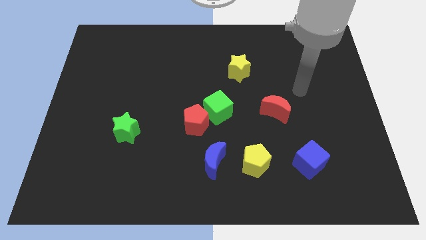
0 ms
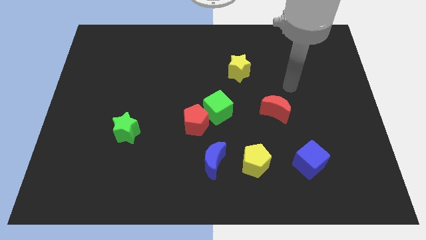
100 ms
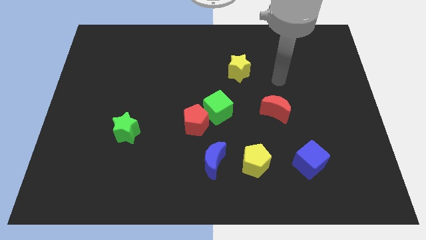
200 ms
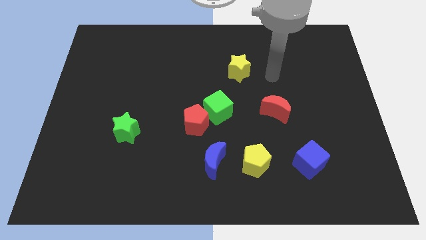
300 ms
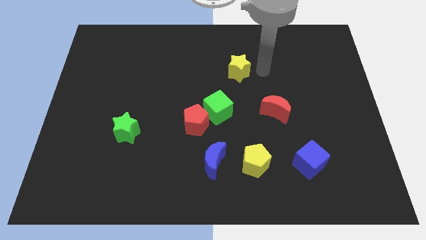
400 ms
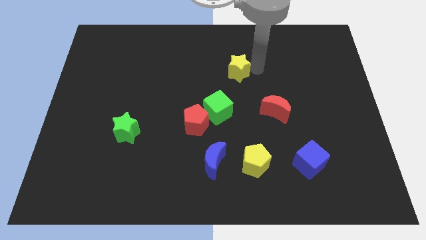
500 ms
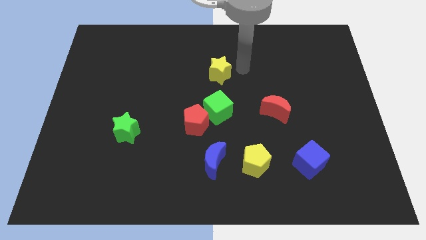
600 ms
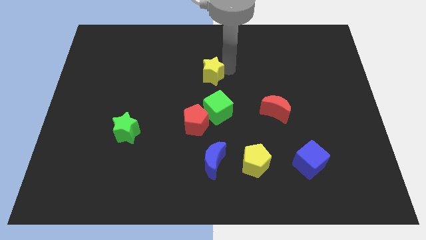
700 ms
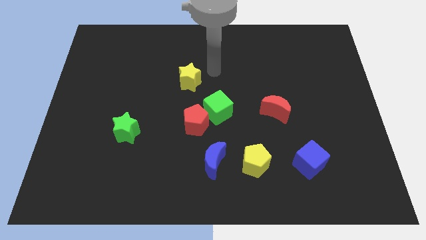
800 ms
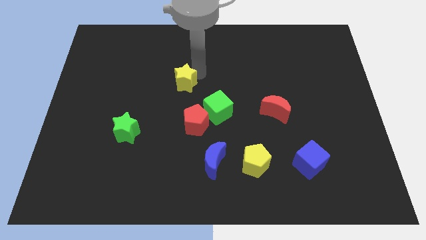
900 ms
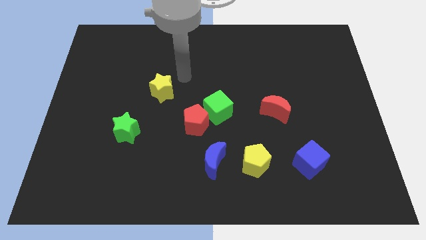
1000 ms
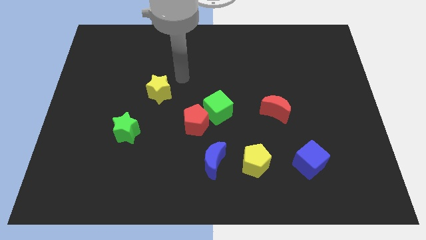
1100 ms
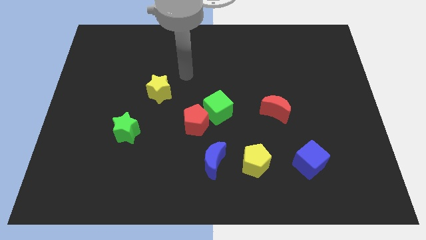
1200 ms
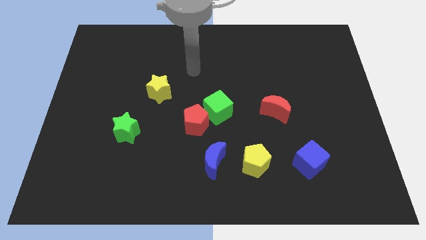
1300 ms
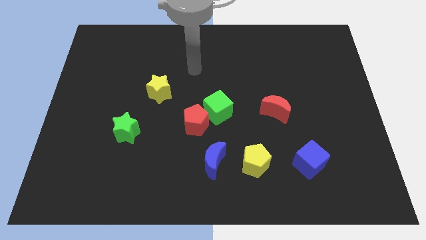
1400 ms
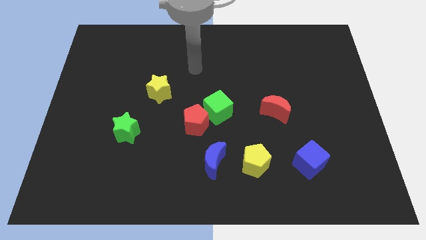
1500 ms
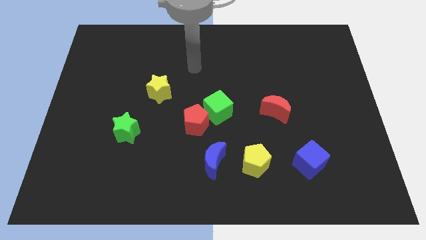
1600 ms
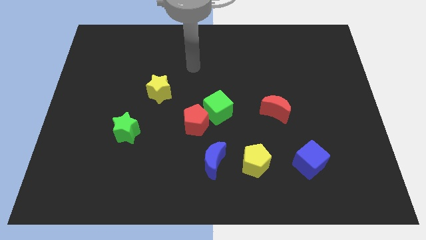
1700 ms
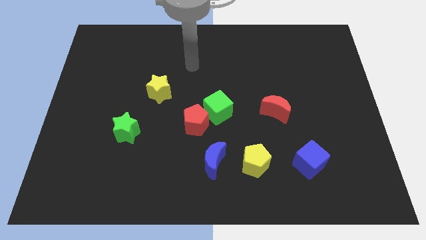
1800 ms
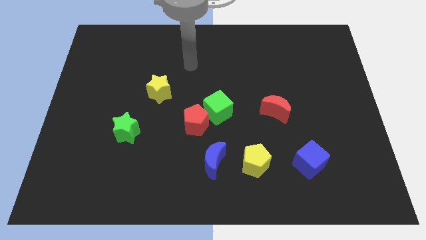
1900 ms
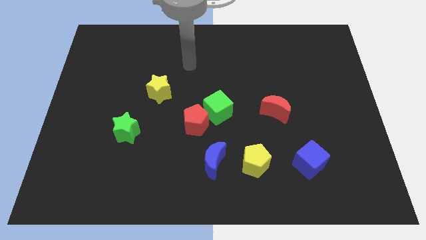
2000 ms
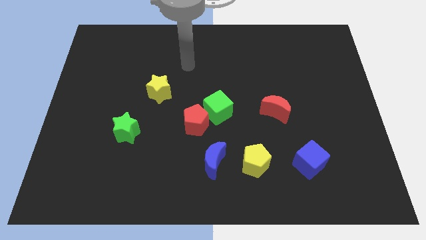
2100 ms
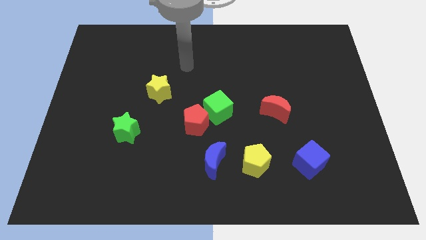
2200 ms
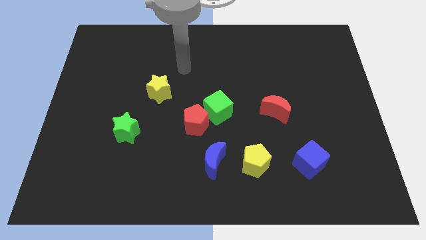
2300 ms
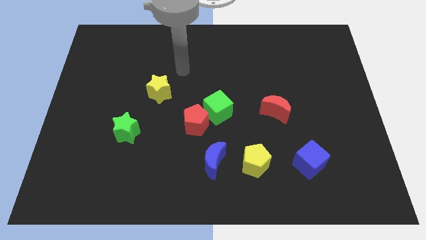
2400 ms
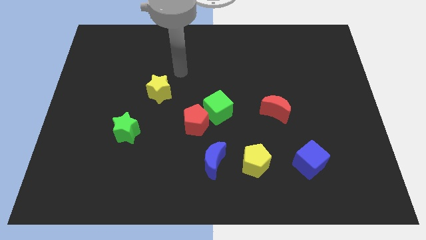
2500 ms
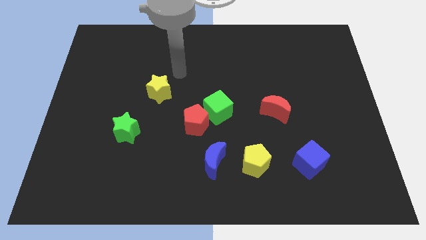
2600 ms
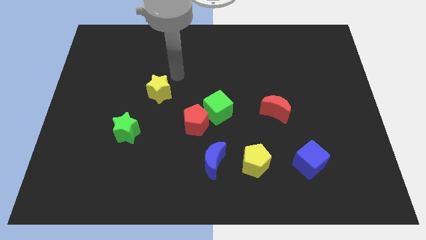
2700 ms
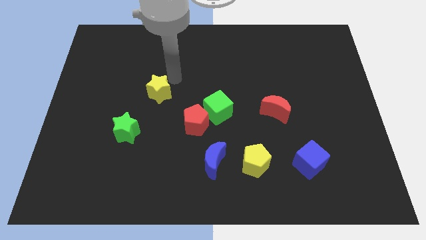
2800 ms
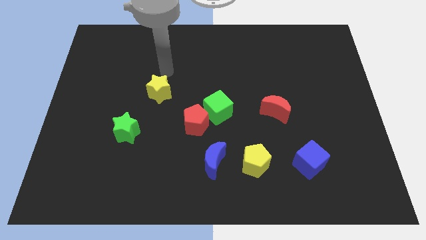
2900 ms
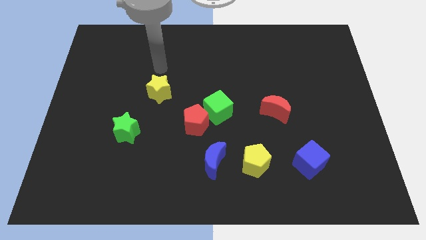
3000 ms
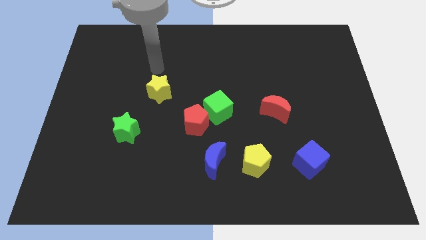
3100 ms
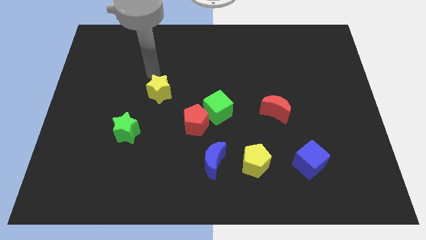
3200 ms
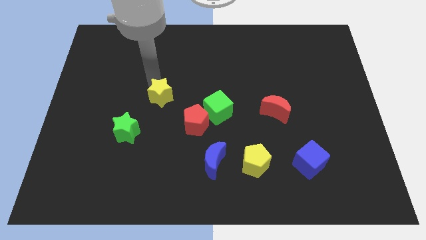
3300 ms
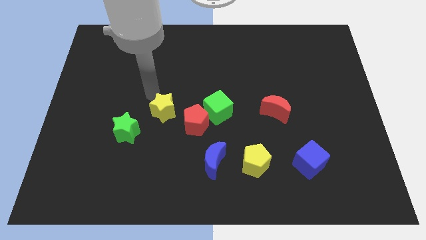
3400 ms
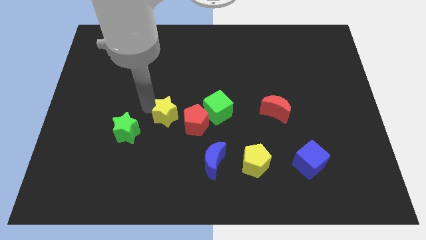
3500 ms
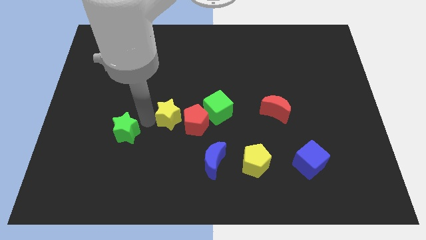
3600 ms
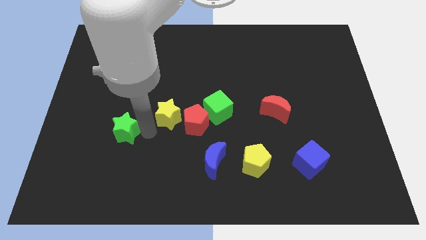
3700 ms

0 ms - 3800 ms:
move the yellow star close to the left side of the red pentagon

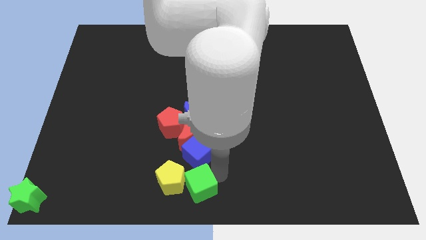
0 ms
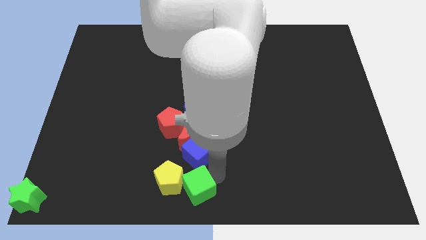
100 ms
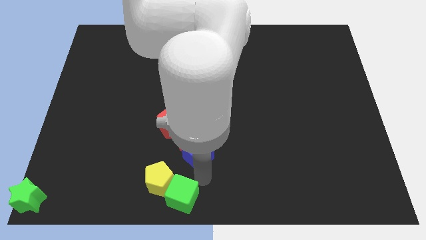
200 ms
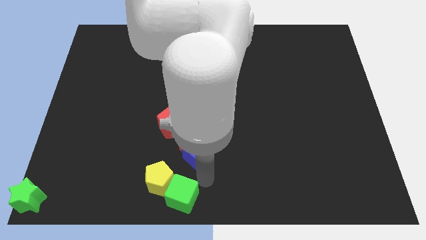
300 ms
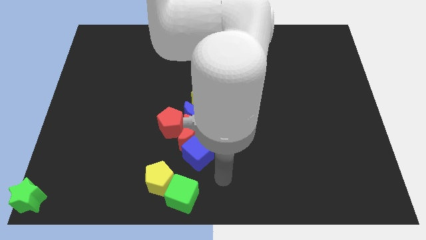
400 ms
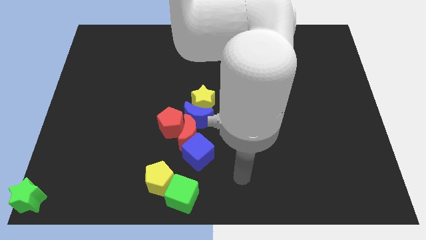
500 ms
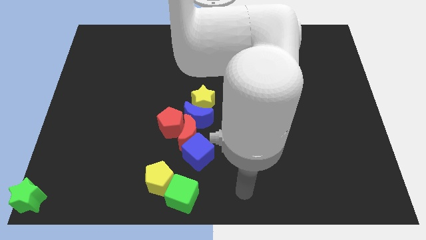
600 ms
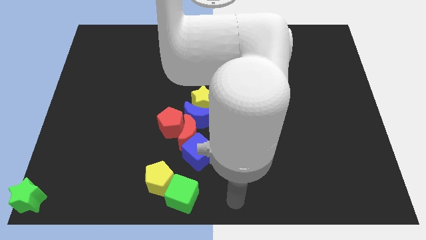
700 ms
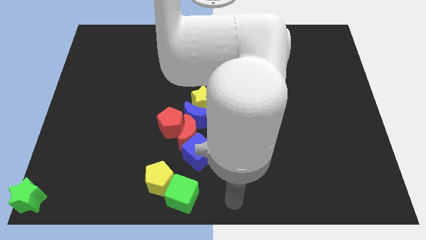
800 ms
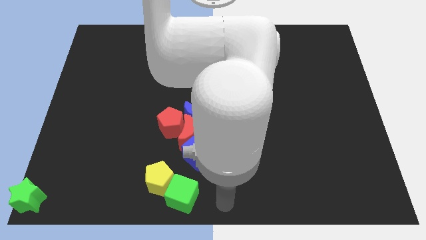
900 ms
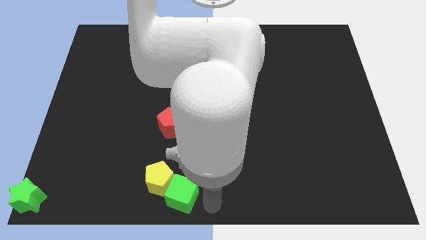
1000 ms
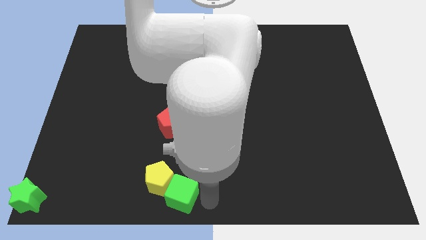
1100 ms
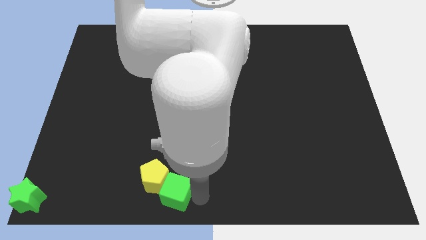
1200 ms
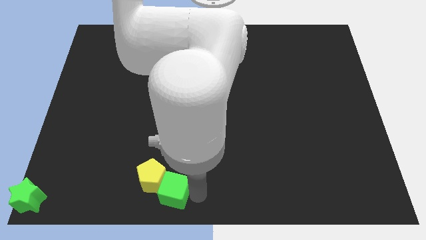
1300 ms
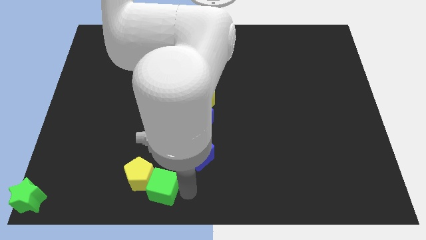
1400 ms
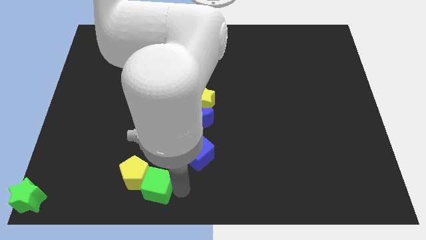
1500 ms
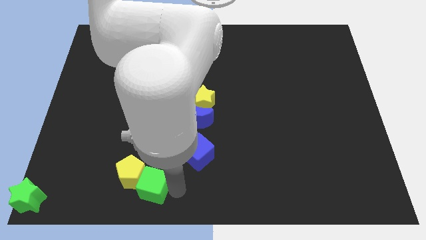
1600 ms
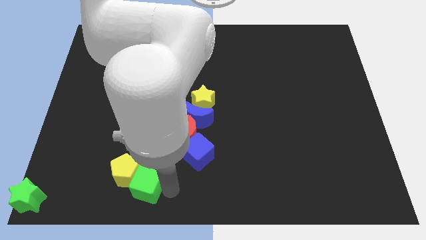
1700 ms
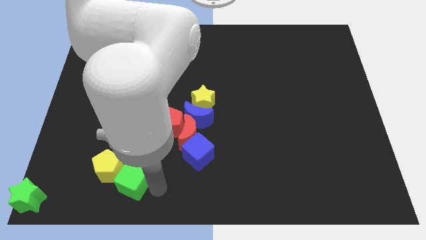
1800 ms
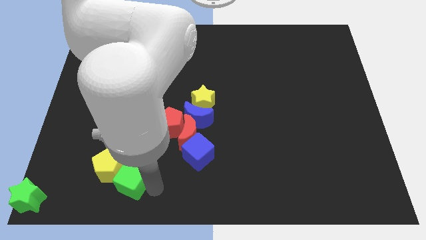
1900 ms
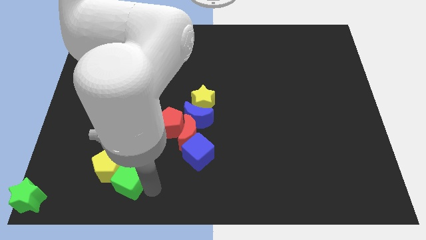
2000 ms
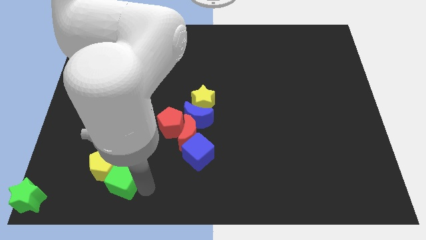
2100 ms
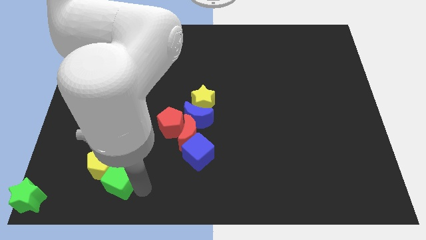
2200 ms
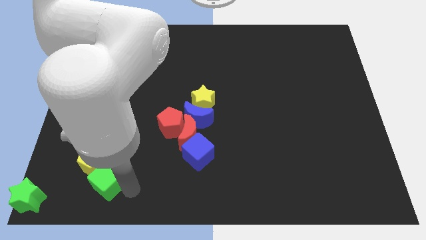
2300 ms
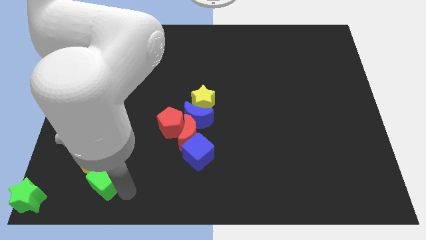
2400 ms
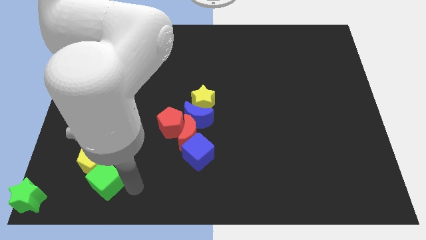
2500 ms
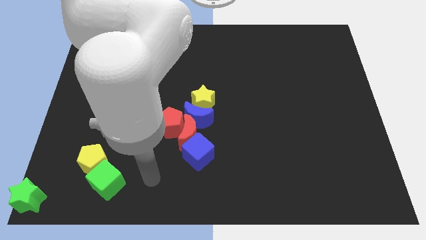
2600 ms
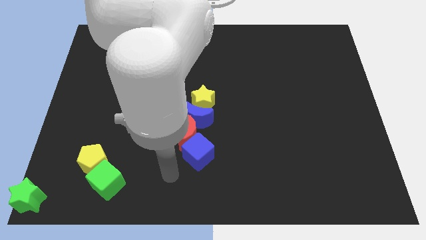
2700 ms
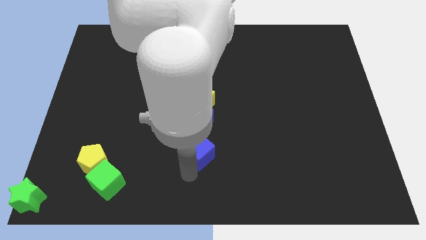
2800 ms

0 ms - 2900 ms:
push the green cube along with yellow pentagon to left side of the board

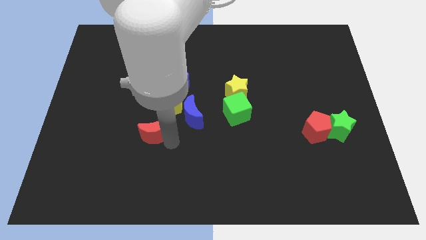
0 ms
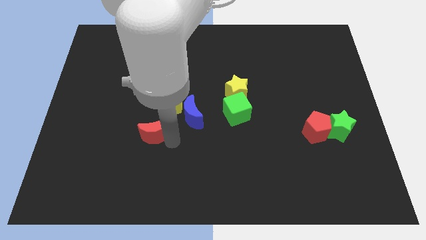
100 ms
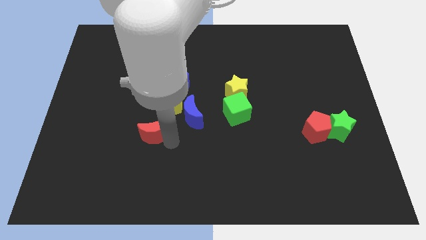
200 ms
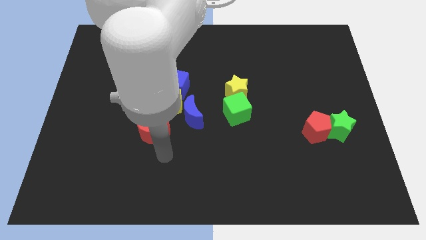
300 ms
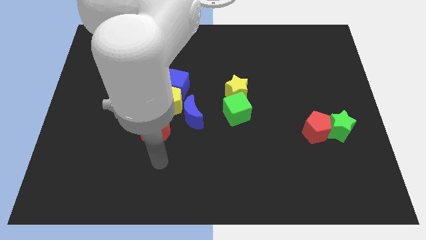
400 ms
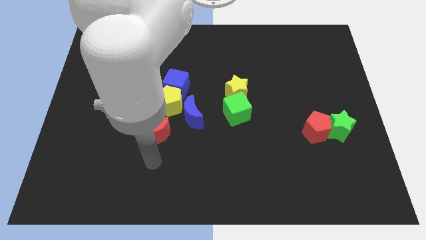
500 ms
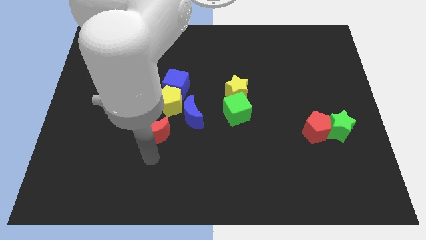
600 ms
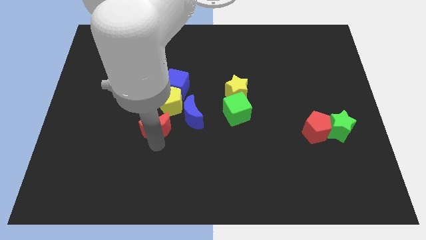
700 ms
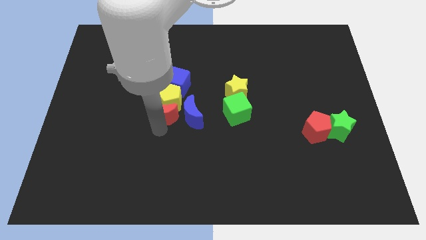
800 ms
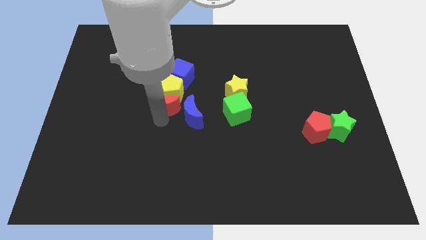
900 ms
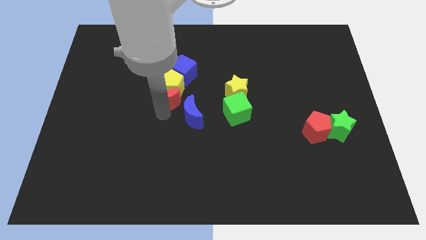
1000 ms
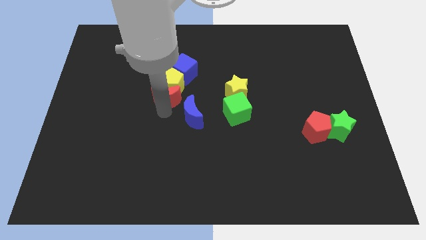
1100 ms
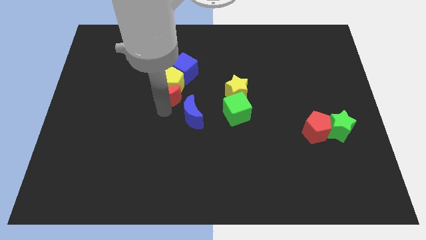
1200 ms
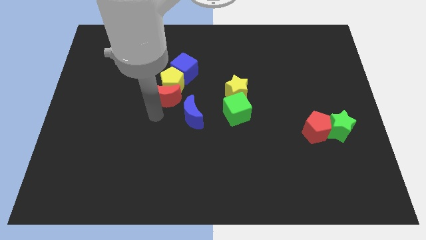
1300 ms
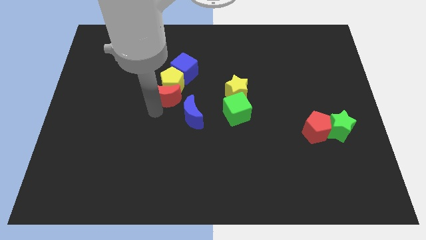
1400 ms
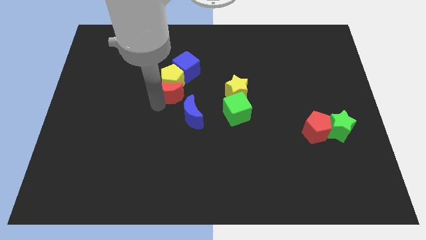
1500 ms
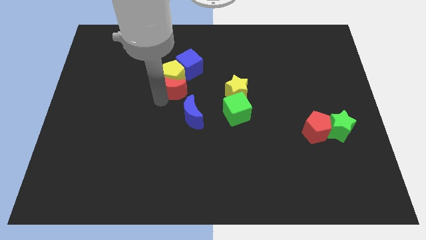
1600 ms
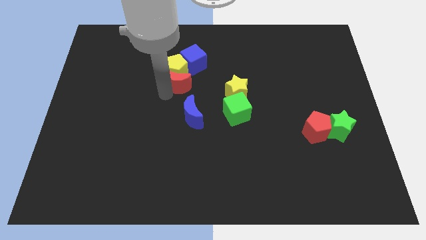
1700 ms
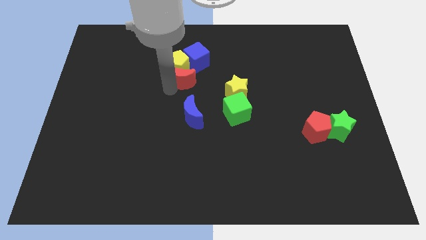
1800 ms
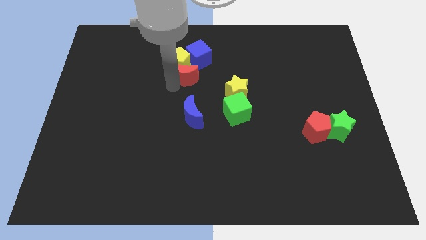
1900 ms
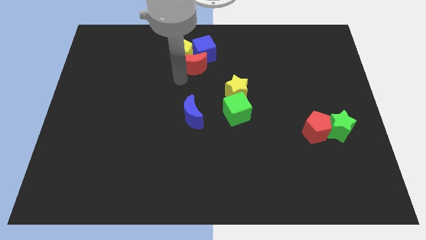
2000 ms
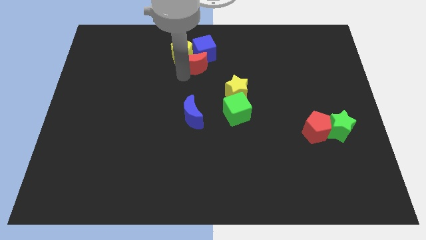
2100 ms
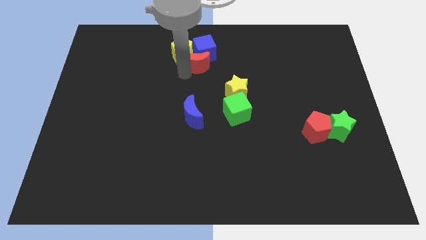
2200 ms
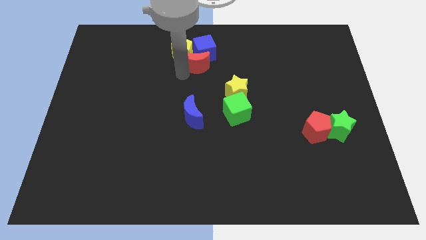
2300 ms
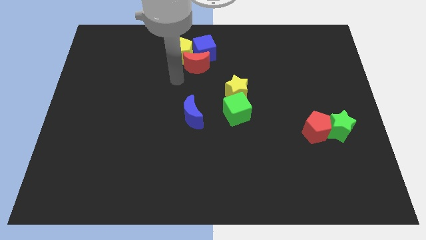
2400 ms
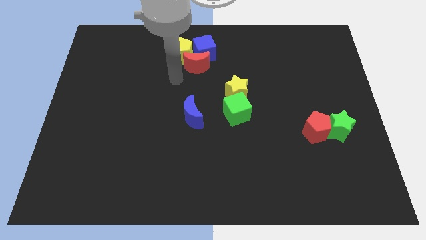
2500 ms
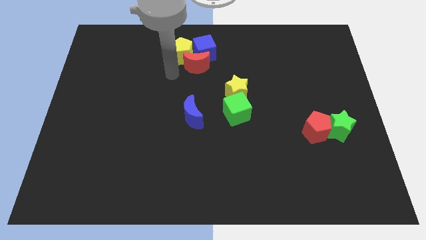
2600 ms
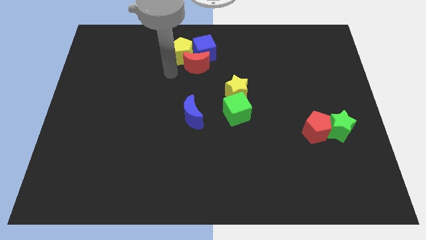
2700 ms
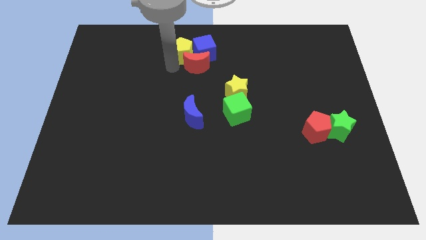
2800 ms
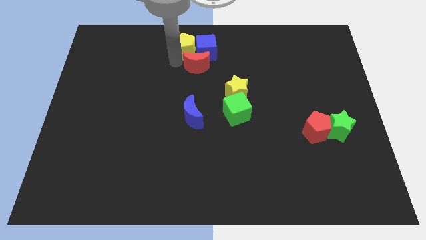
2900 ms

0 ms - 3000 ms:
push the yellow pentagon blue cube and the red crescent together to the top of the blue crescent
